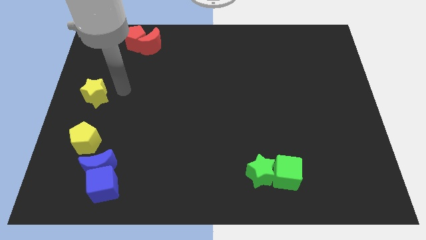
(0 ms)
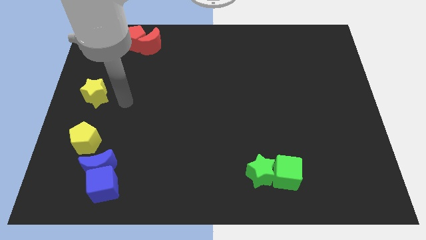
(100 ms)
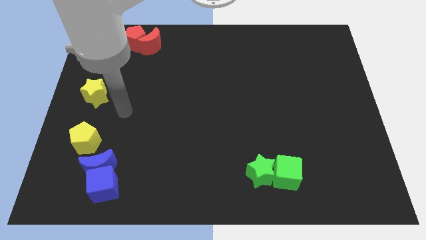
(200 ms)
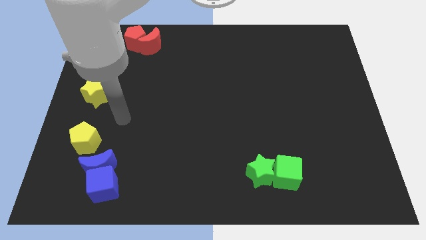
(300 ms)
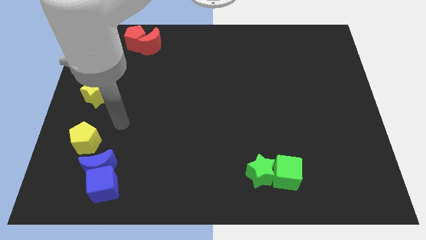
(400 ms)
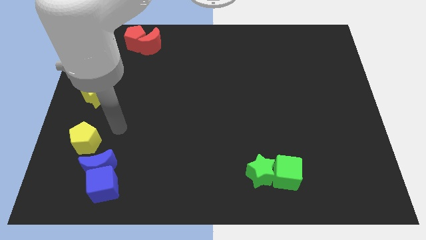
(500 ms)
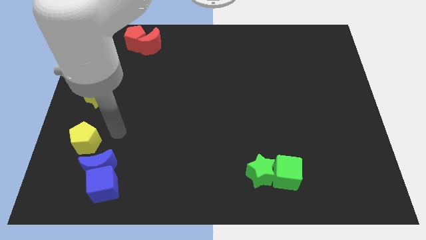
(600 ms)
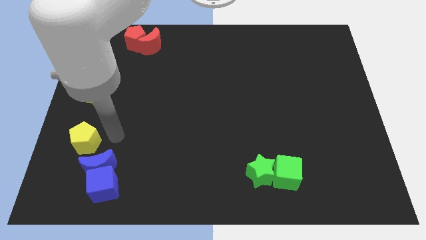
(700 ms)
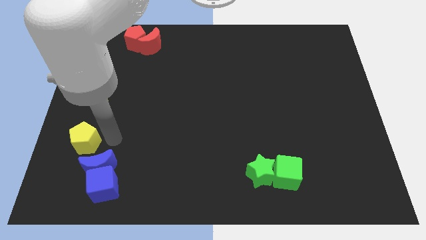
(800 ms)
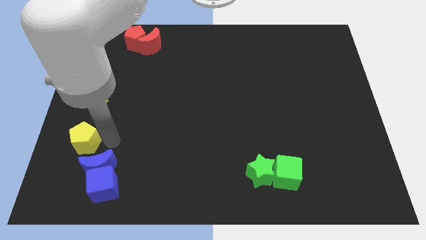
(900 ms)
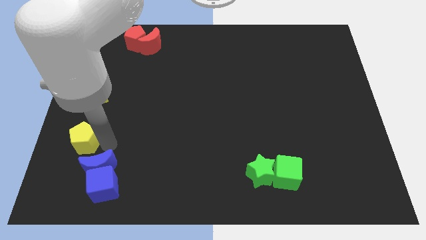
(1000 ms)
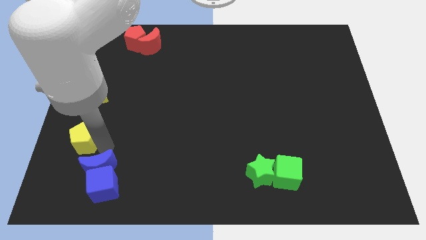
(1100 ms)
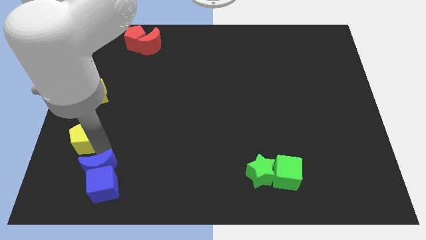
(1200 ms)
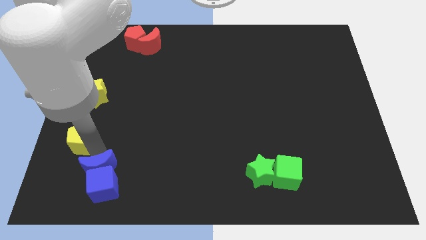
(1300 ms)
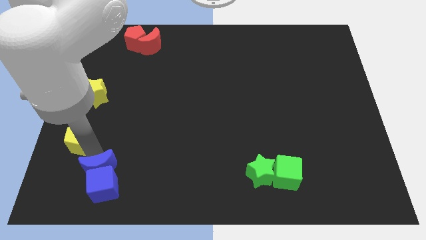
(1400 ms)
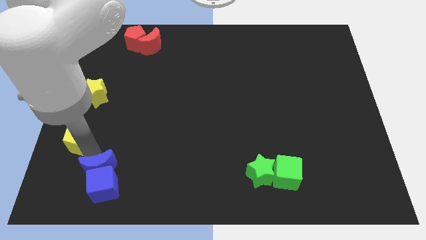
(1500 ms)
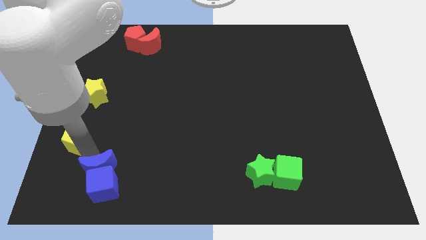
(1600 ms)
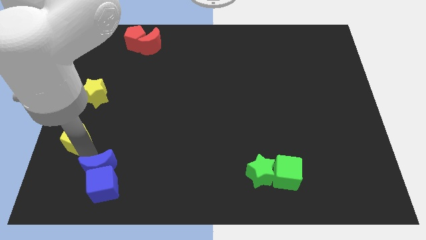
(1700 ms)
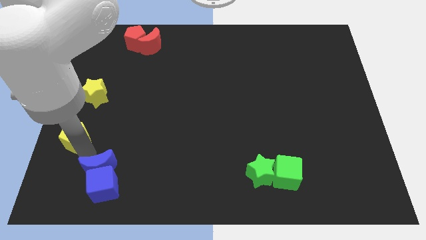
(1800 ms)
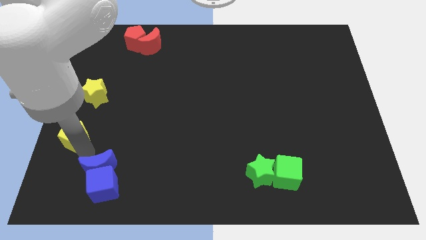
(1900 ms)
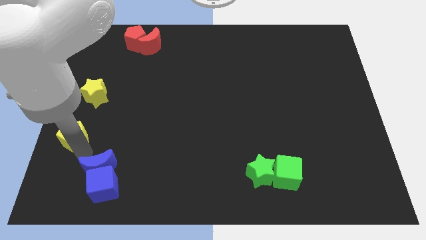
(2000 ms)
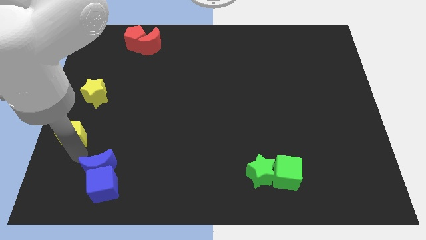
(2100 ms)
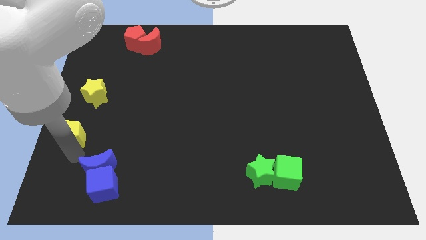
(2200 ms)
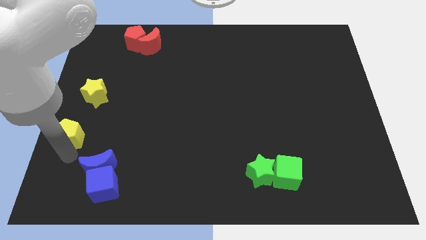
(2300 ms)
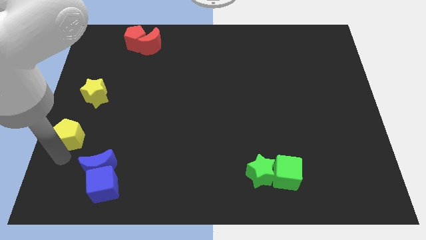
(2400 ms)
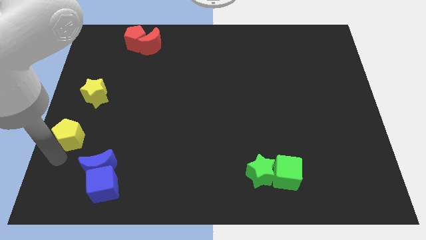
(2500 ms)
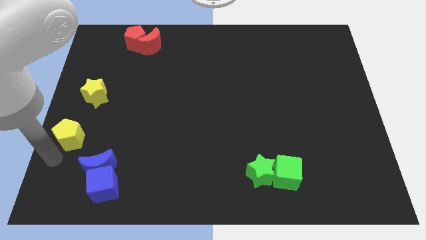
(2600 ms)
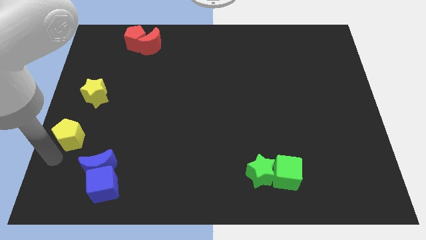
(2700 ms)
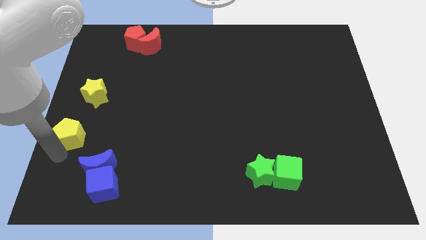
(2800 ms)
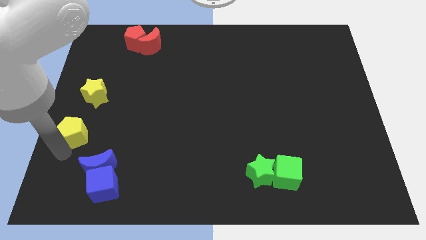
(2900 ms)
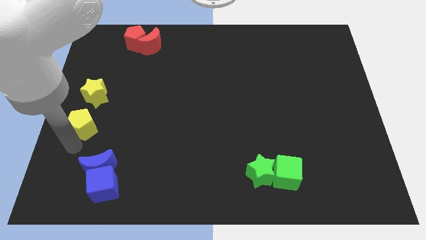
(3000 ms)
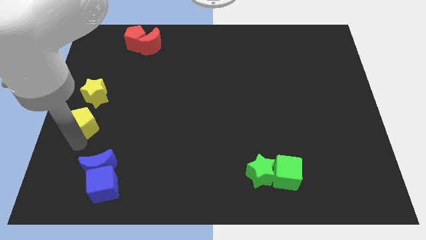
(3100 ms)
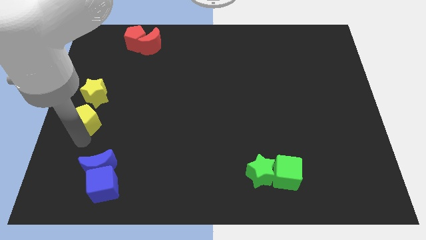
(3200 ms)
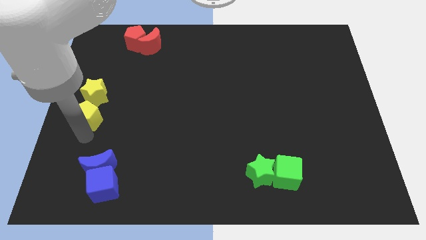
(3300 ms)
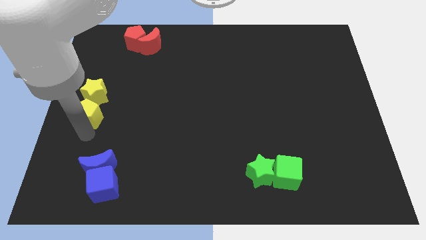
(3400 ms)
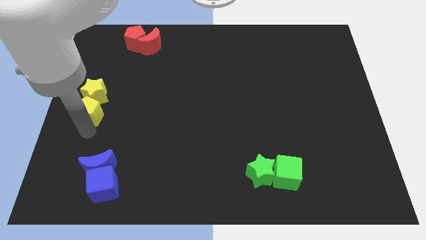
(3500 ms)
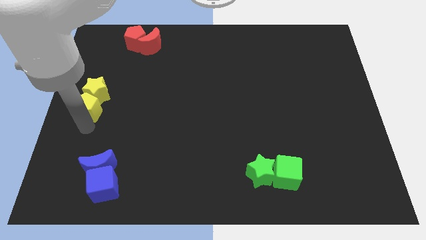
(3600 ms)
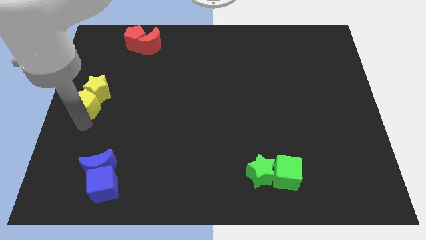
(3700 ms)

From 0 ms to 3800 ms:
push the yellow pentagon towards the yellow star

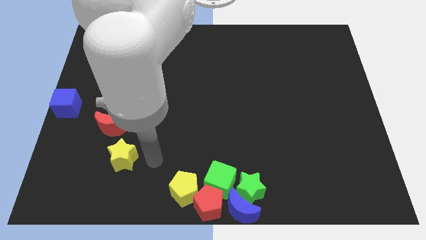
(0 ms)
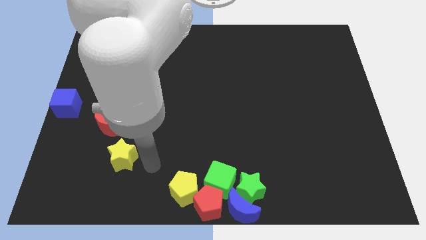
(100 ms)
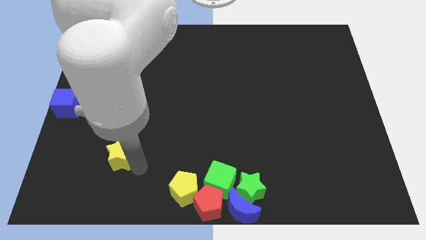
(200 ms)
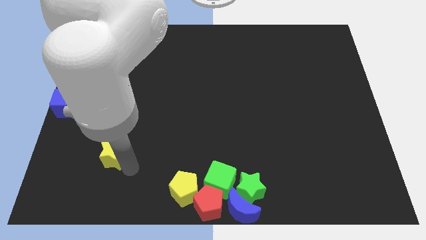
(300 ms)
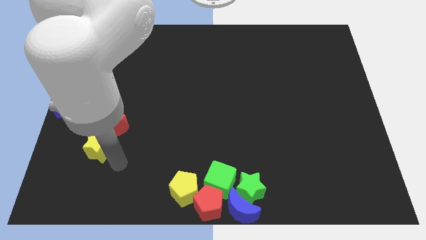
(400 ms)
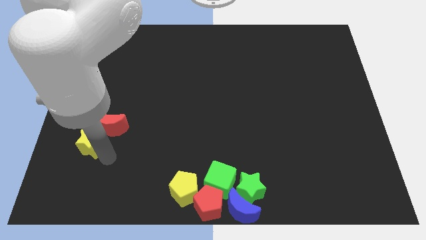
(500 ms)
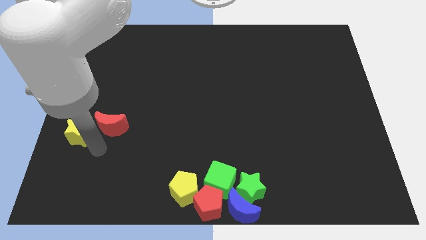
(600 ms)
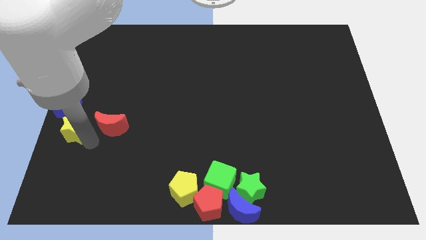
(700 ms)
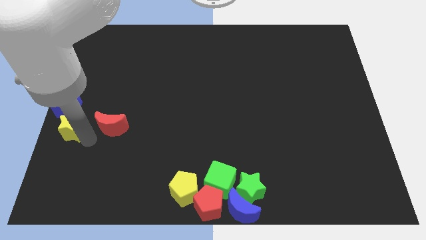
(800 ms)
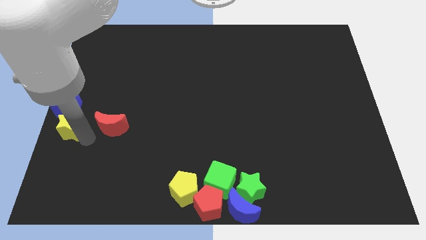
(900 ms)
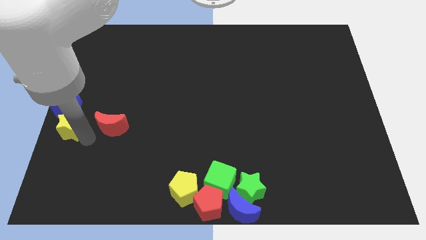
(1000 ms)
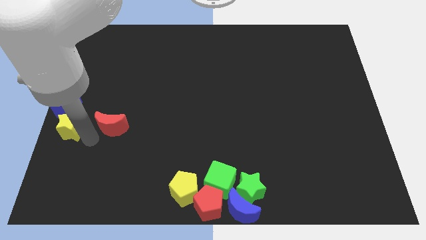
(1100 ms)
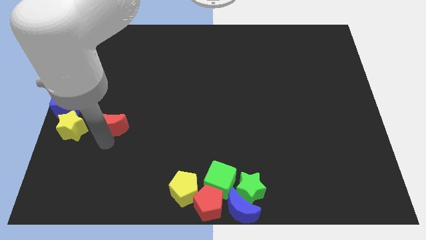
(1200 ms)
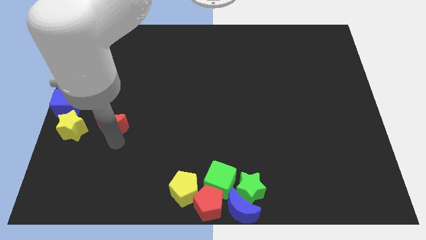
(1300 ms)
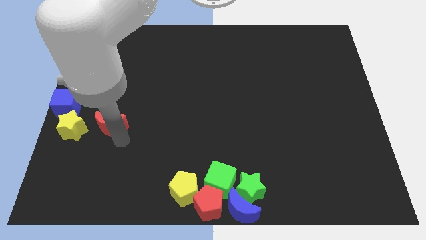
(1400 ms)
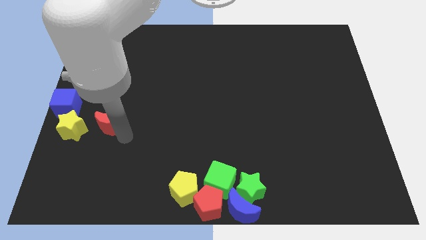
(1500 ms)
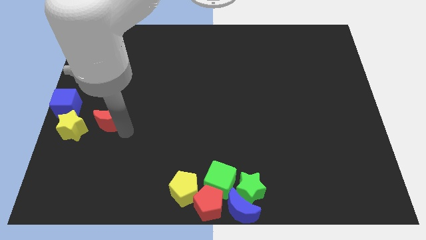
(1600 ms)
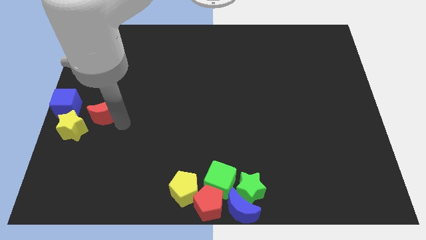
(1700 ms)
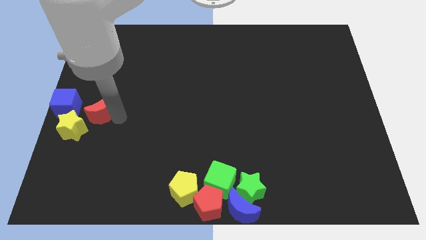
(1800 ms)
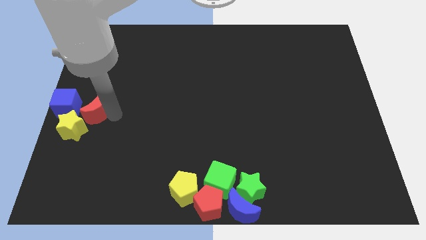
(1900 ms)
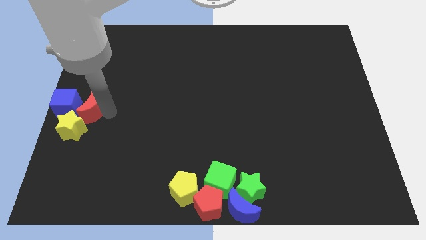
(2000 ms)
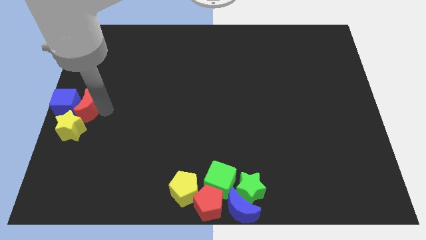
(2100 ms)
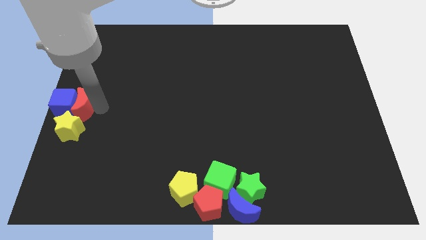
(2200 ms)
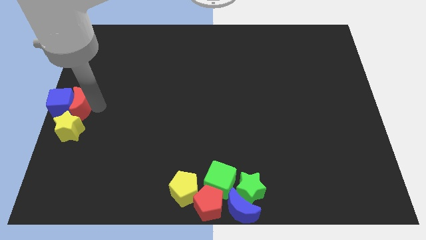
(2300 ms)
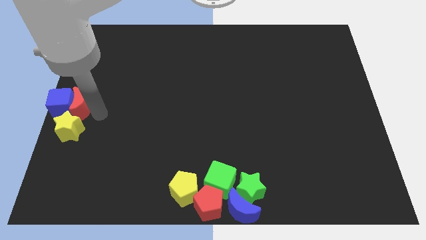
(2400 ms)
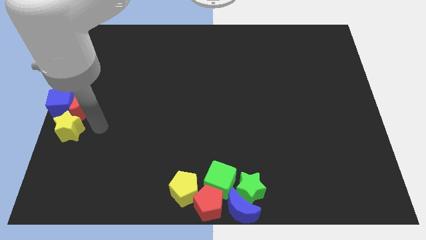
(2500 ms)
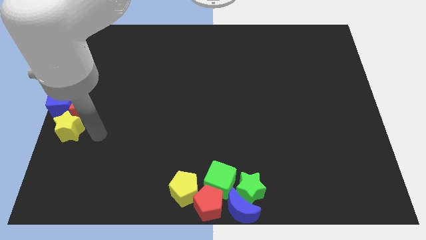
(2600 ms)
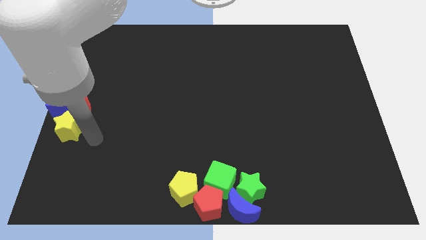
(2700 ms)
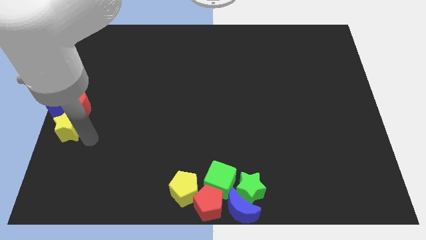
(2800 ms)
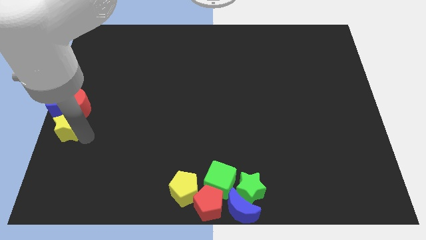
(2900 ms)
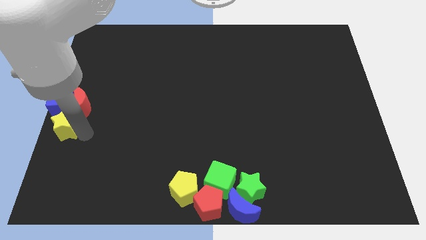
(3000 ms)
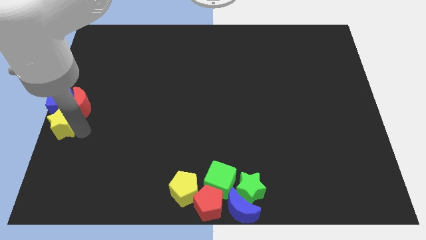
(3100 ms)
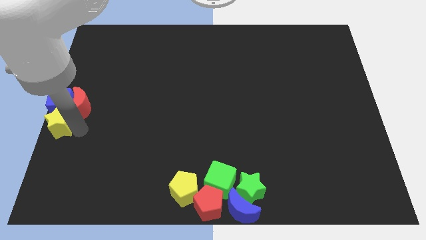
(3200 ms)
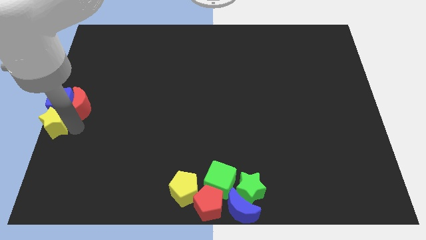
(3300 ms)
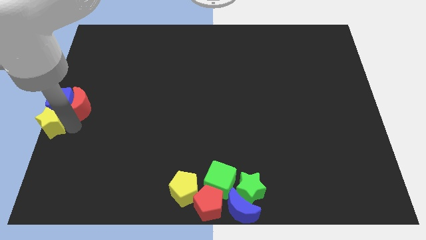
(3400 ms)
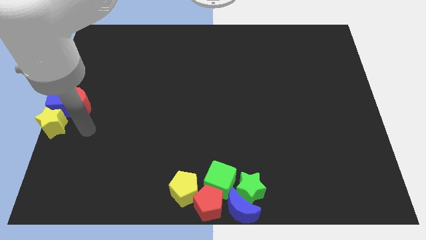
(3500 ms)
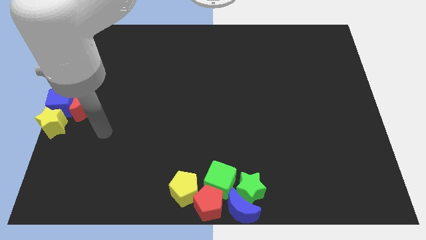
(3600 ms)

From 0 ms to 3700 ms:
place the red crescent and yellow star at center left

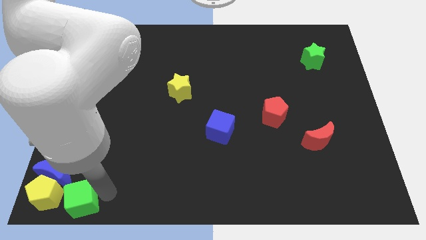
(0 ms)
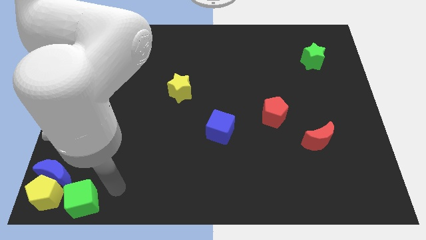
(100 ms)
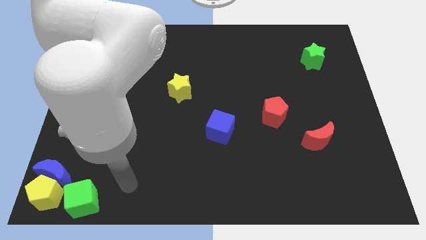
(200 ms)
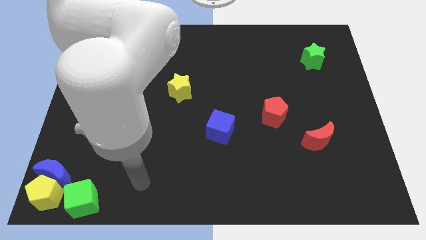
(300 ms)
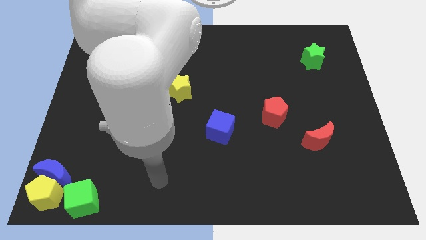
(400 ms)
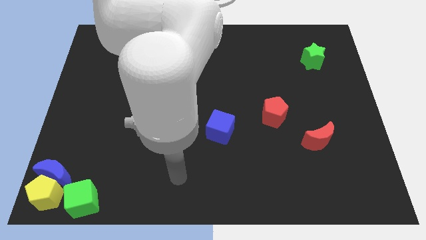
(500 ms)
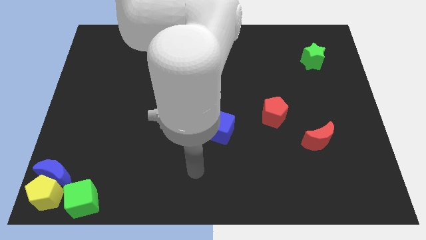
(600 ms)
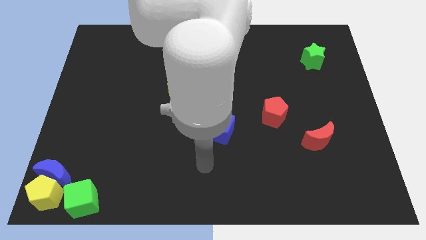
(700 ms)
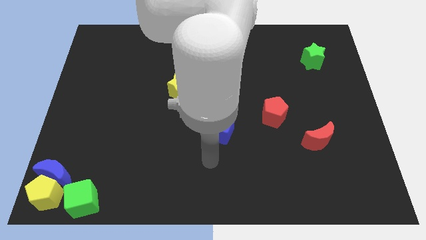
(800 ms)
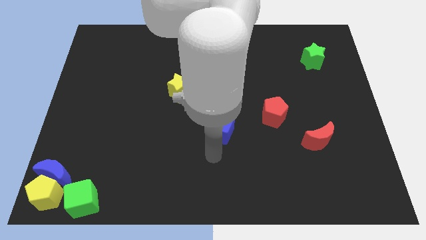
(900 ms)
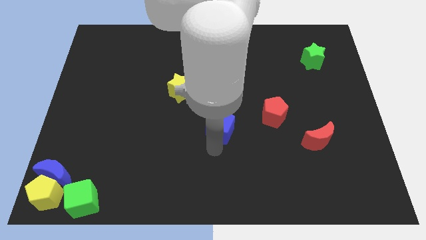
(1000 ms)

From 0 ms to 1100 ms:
move your arm to the bottom of blue cube

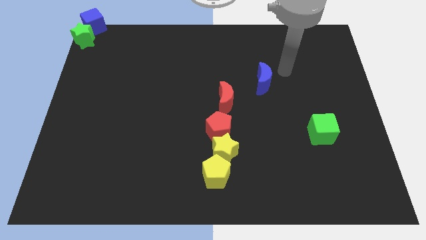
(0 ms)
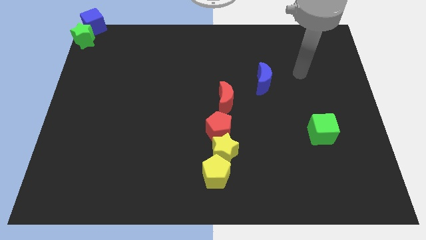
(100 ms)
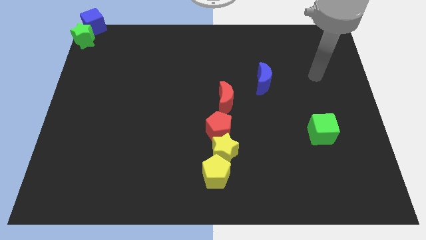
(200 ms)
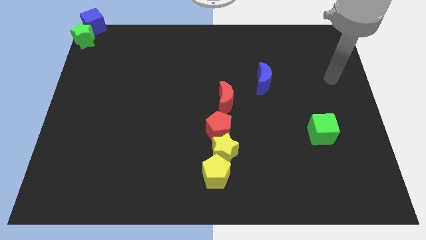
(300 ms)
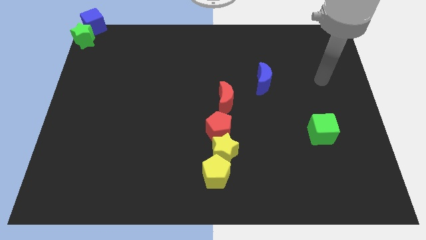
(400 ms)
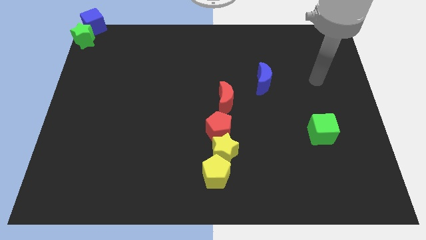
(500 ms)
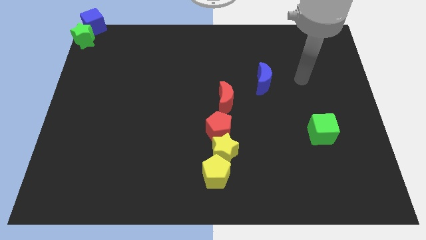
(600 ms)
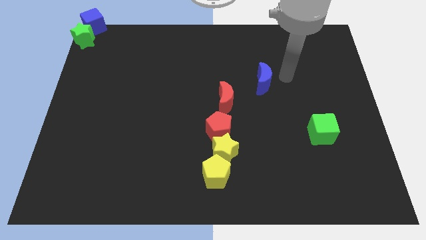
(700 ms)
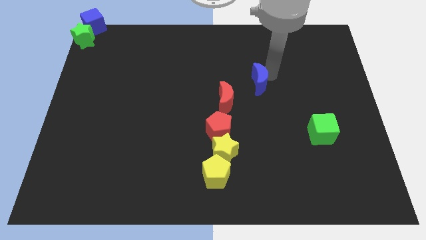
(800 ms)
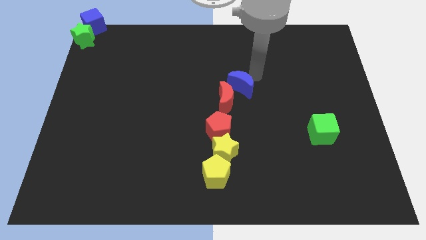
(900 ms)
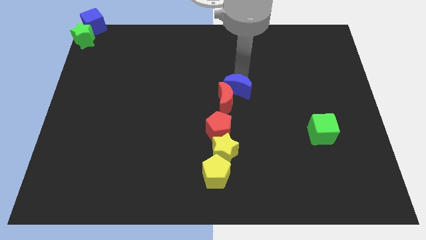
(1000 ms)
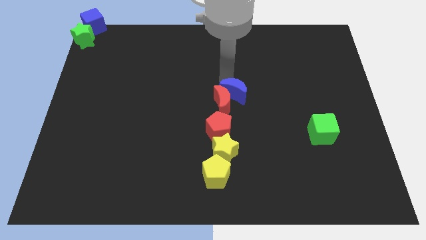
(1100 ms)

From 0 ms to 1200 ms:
push blue moon into red moon
